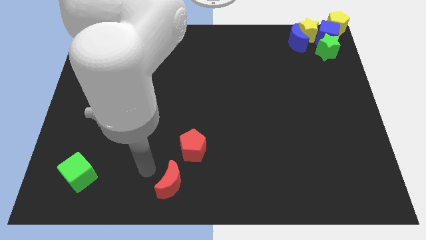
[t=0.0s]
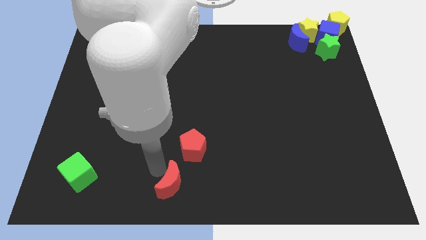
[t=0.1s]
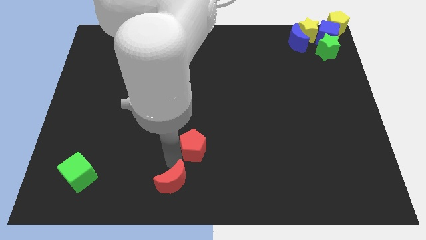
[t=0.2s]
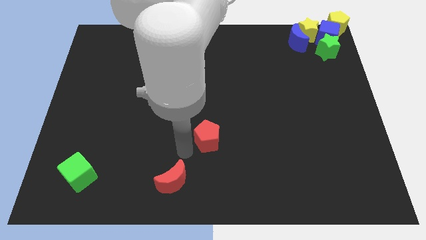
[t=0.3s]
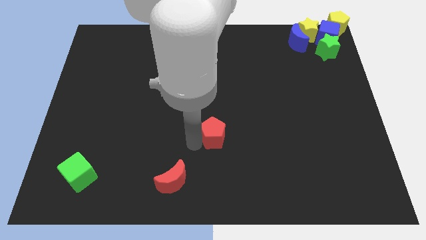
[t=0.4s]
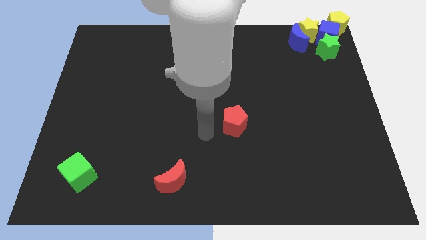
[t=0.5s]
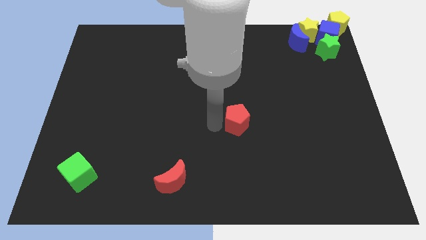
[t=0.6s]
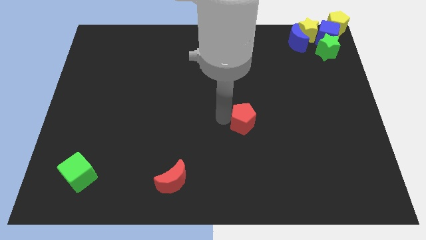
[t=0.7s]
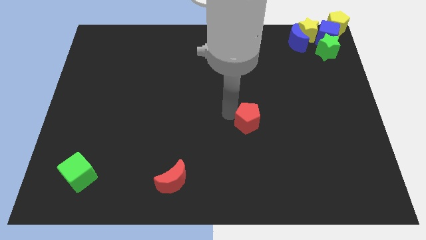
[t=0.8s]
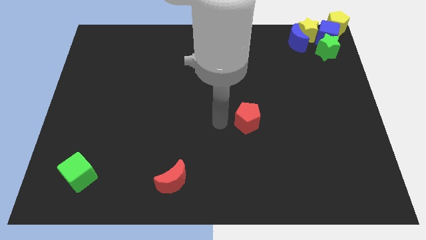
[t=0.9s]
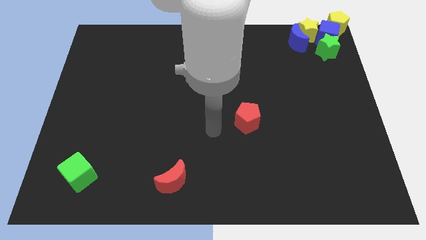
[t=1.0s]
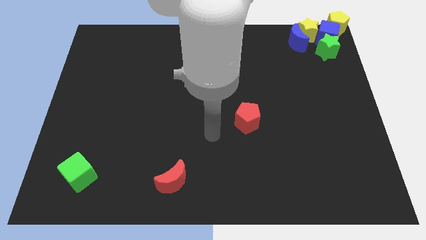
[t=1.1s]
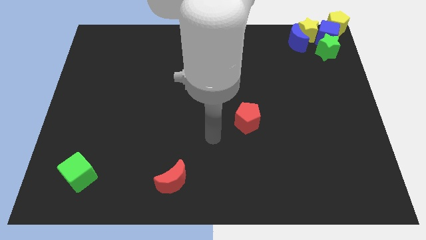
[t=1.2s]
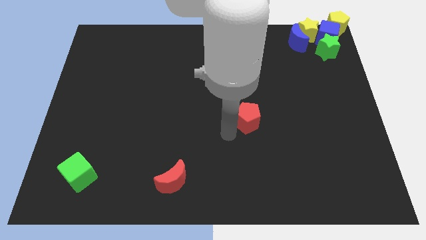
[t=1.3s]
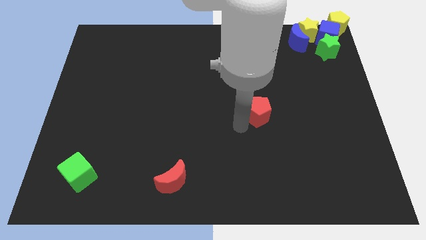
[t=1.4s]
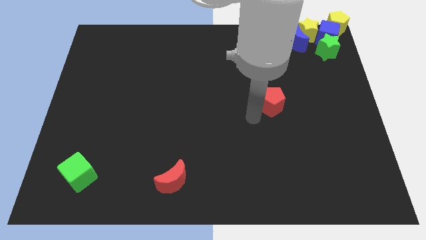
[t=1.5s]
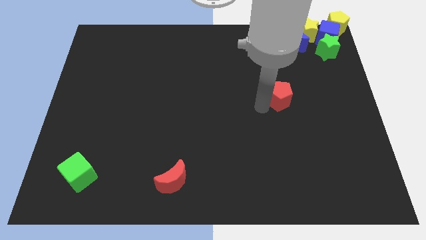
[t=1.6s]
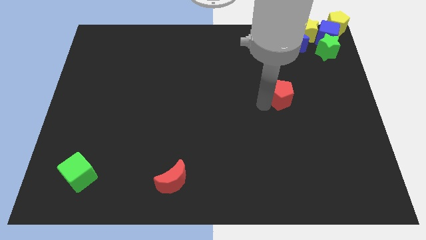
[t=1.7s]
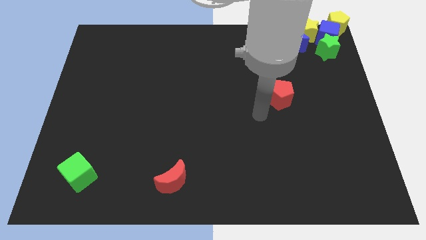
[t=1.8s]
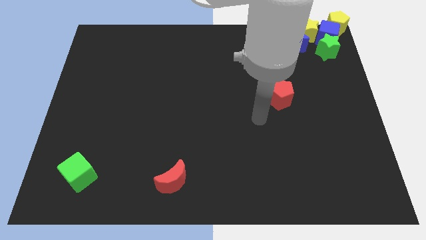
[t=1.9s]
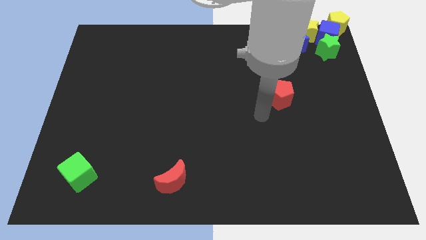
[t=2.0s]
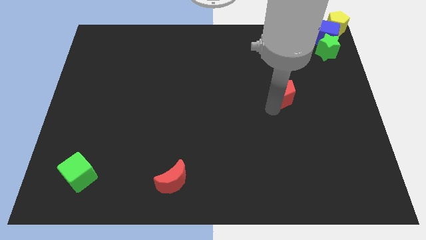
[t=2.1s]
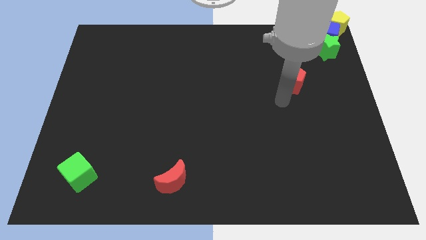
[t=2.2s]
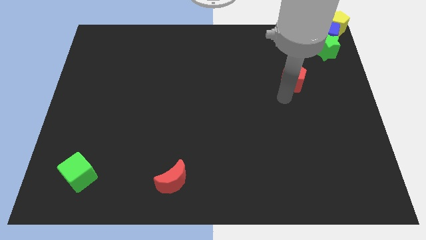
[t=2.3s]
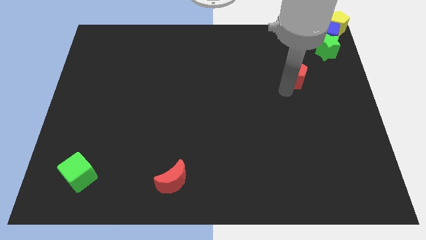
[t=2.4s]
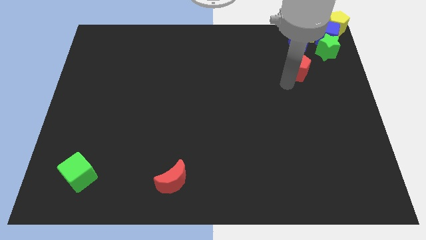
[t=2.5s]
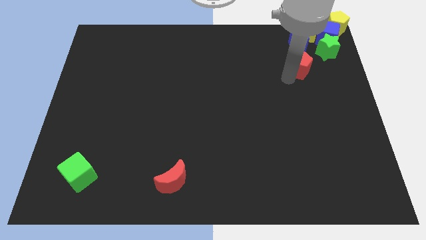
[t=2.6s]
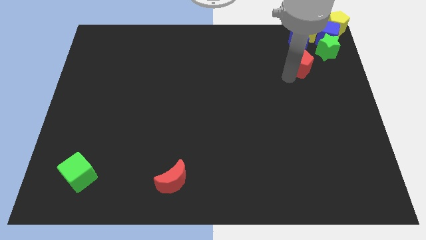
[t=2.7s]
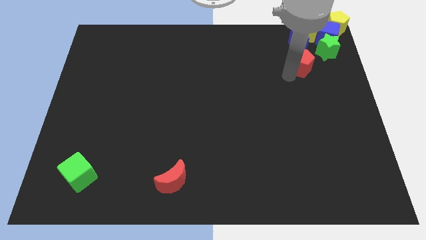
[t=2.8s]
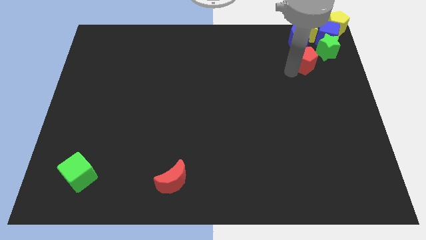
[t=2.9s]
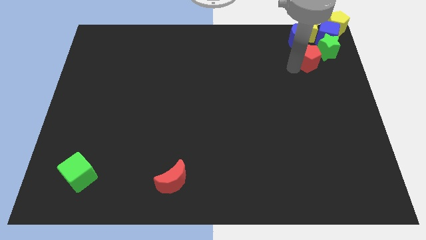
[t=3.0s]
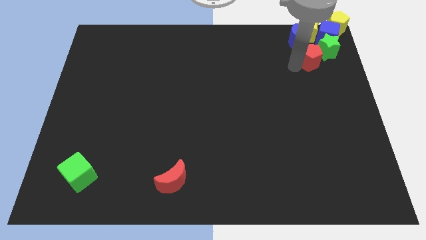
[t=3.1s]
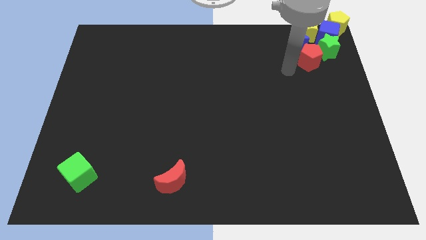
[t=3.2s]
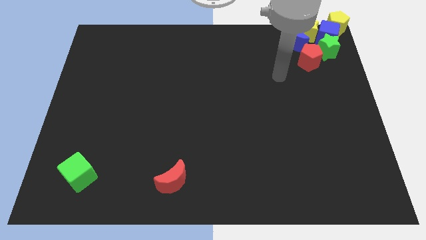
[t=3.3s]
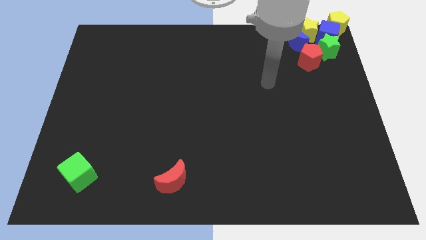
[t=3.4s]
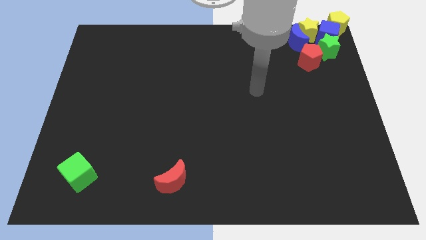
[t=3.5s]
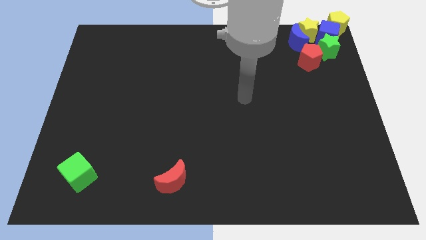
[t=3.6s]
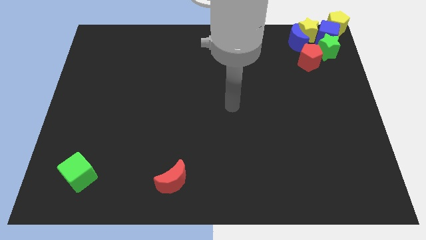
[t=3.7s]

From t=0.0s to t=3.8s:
push red pentagon away from red moon

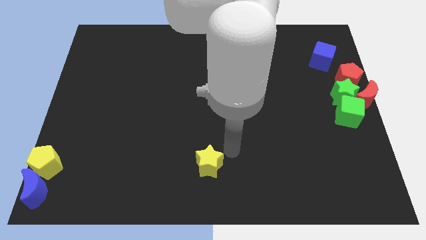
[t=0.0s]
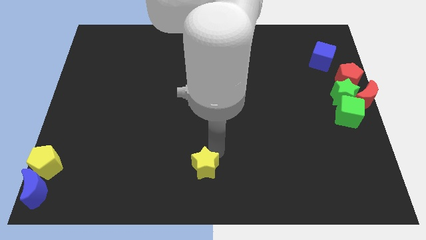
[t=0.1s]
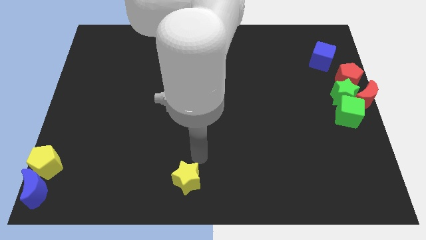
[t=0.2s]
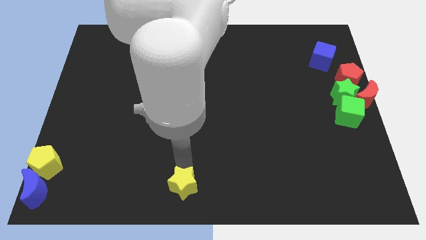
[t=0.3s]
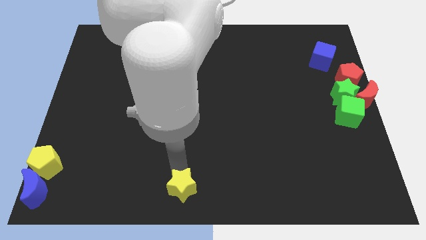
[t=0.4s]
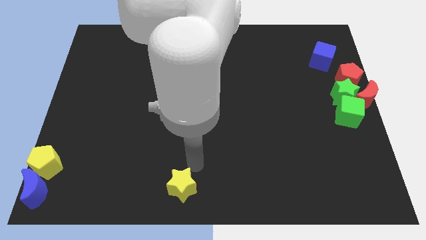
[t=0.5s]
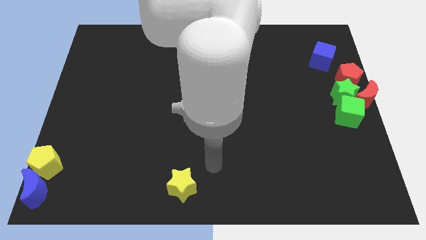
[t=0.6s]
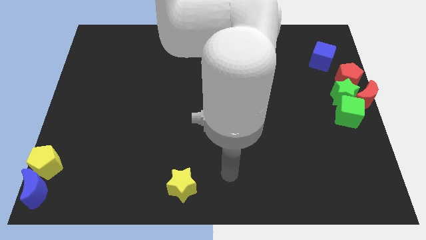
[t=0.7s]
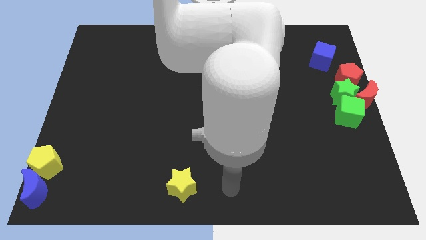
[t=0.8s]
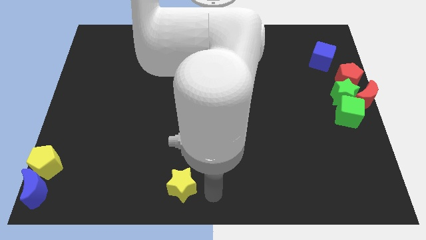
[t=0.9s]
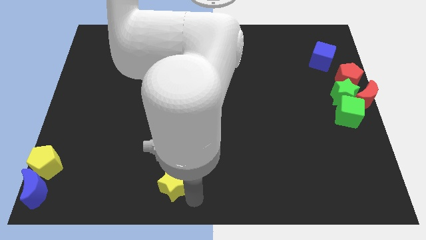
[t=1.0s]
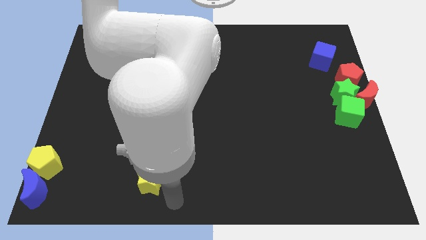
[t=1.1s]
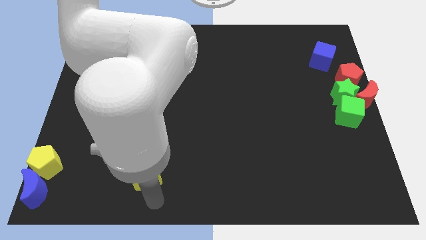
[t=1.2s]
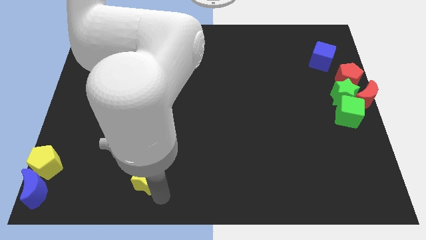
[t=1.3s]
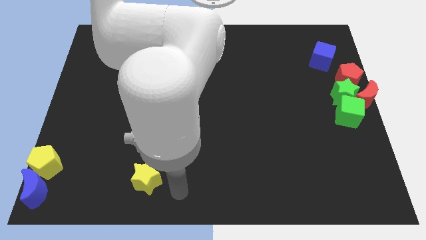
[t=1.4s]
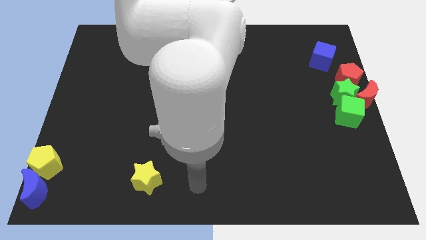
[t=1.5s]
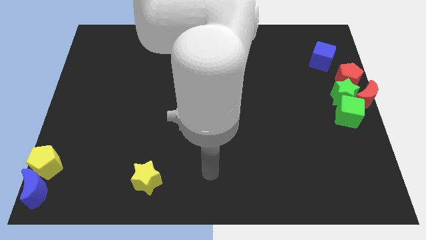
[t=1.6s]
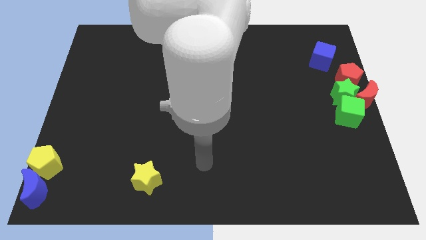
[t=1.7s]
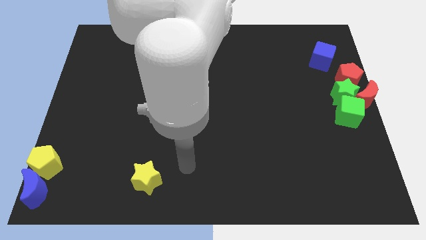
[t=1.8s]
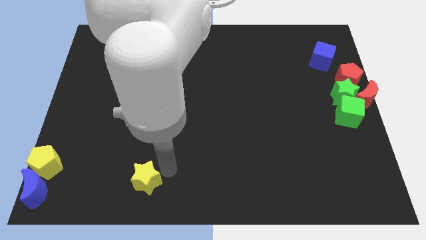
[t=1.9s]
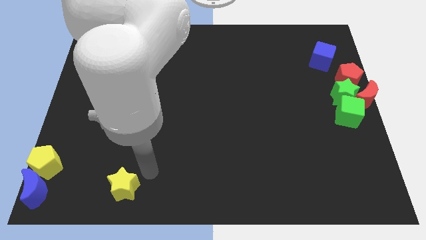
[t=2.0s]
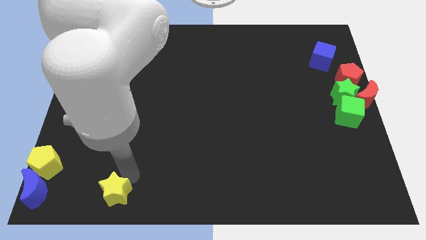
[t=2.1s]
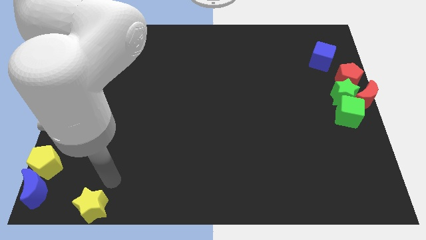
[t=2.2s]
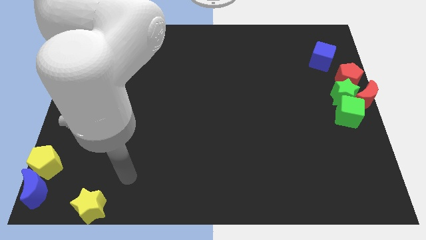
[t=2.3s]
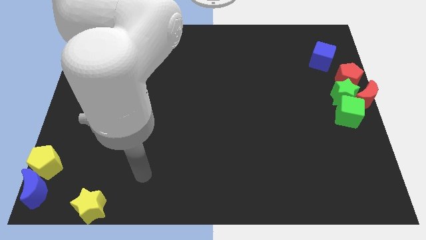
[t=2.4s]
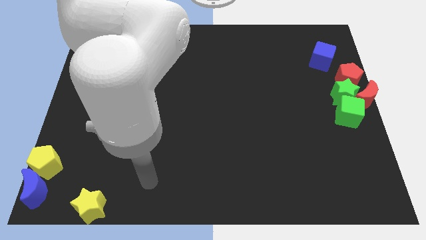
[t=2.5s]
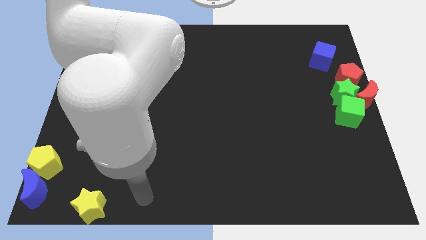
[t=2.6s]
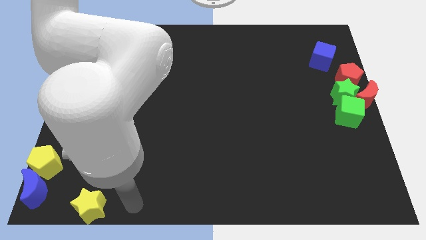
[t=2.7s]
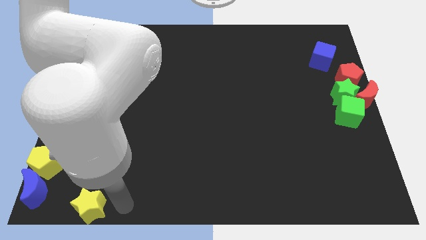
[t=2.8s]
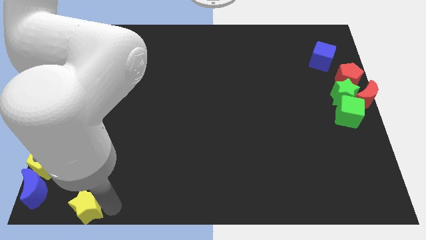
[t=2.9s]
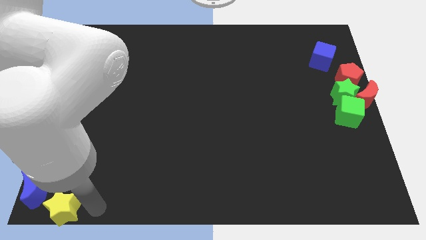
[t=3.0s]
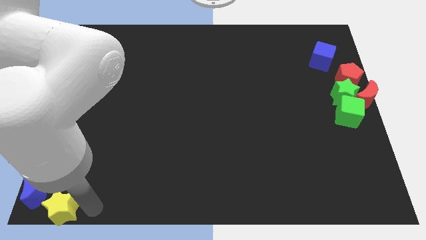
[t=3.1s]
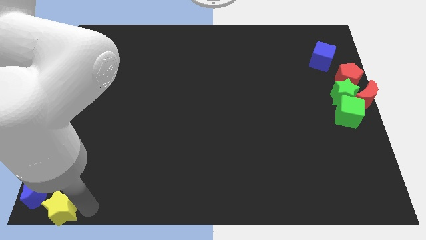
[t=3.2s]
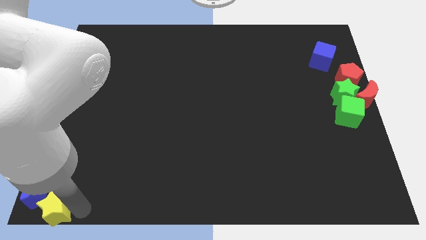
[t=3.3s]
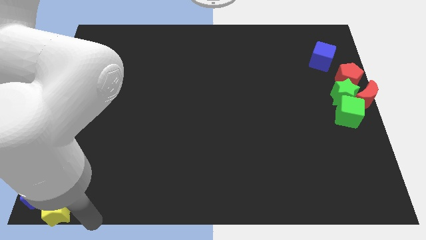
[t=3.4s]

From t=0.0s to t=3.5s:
move the yellow star to the bottom right of the blue crescent

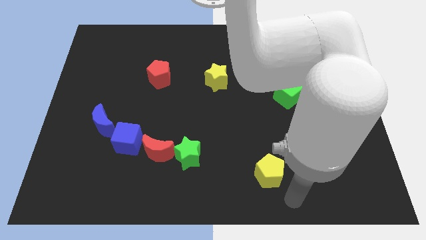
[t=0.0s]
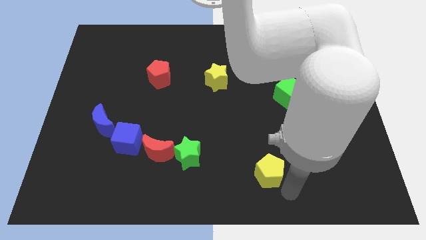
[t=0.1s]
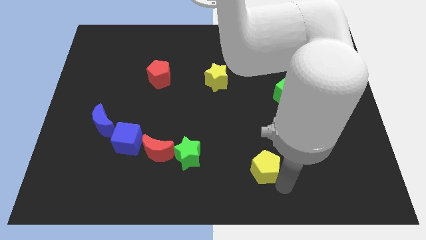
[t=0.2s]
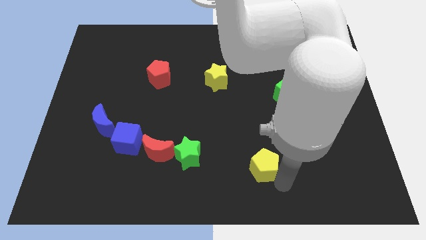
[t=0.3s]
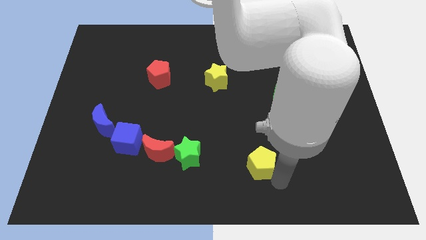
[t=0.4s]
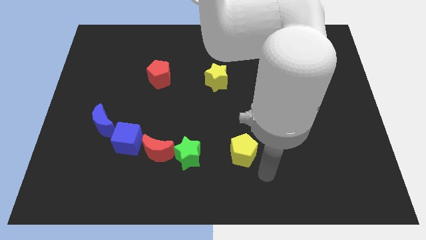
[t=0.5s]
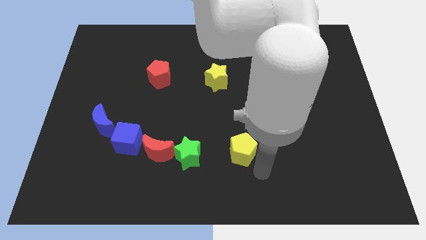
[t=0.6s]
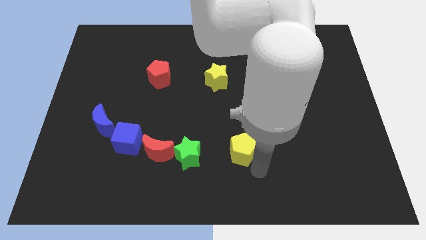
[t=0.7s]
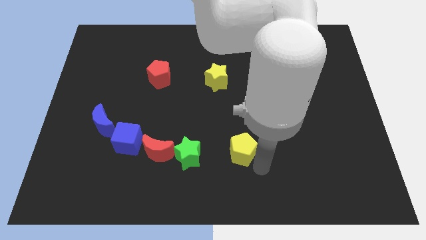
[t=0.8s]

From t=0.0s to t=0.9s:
place the yellow pentagon parallel to green star

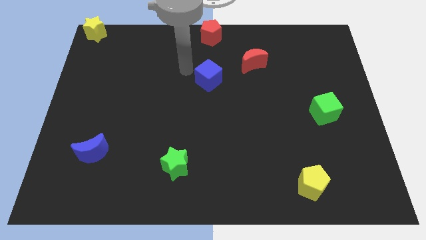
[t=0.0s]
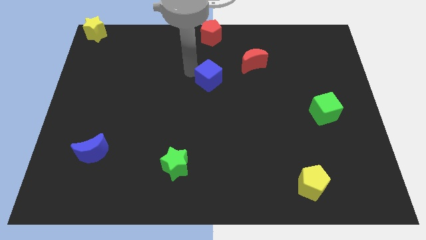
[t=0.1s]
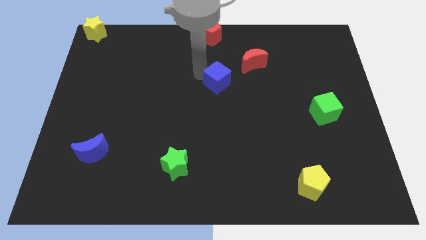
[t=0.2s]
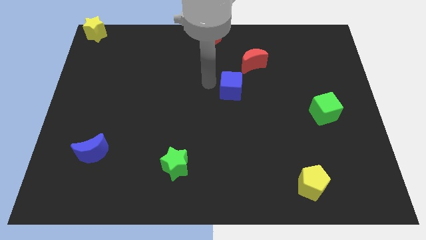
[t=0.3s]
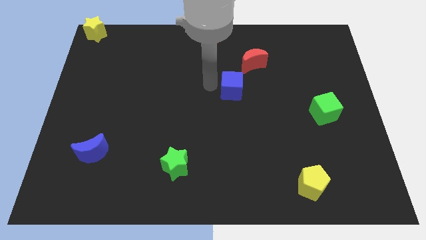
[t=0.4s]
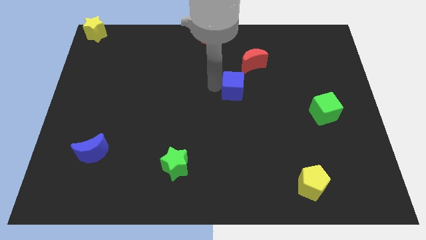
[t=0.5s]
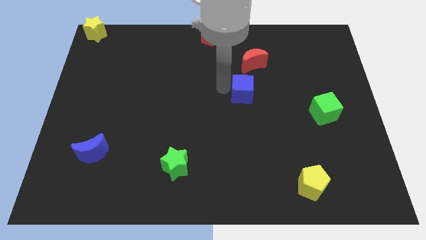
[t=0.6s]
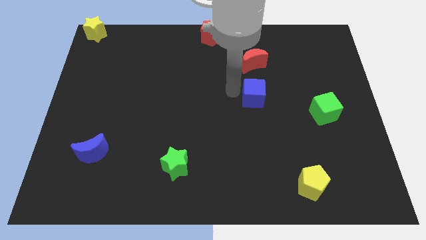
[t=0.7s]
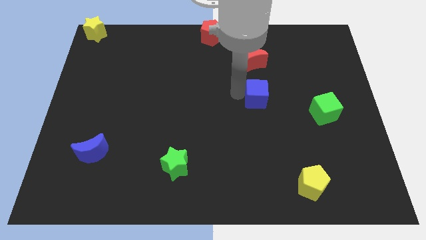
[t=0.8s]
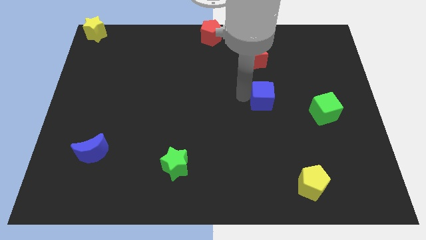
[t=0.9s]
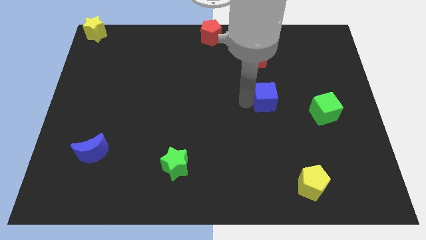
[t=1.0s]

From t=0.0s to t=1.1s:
push the blue cube vertical to the red moon
